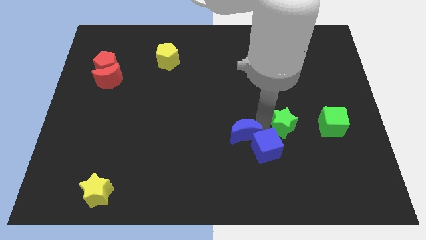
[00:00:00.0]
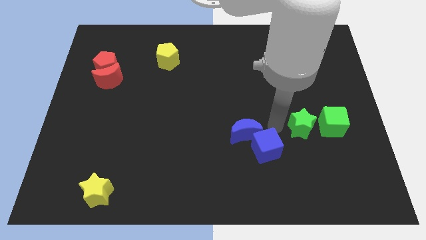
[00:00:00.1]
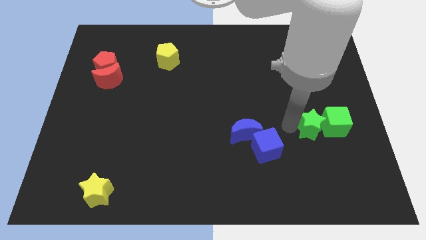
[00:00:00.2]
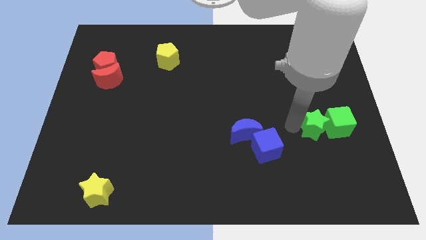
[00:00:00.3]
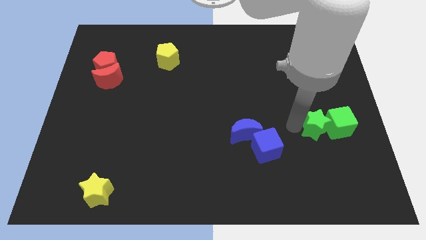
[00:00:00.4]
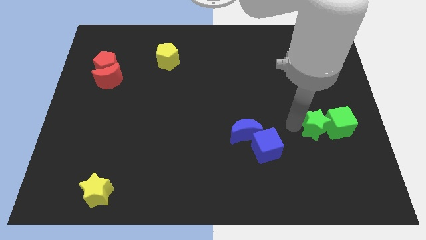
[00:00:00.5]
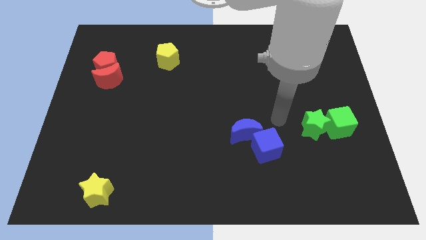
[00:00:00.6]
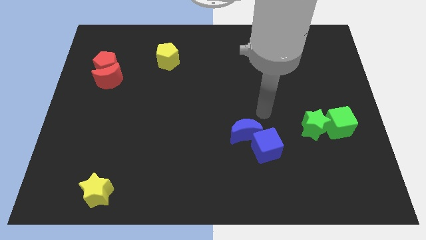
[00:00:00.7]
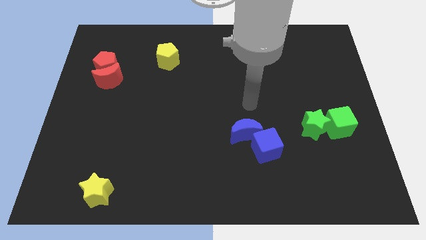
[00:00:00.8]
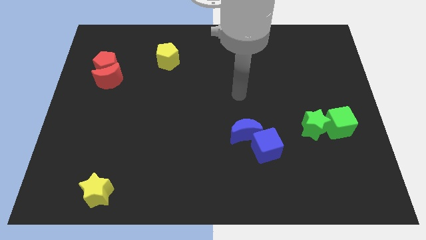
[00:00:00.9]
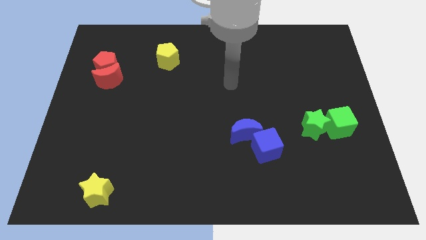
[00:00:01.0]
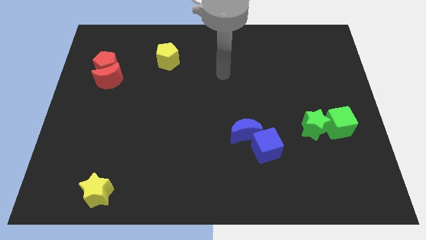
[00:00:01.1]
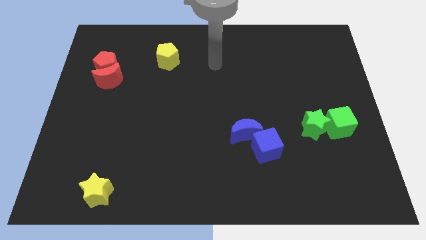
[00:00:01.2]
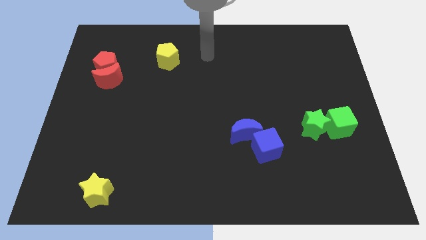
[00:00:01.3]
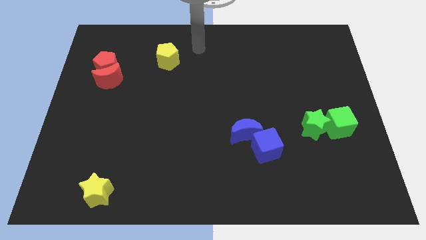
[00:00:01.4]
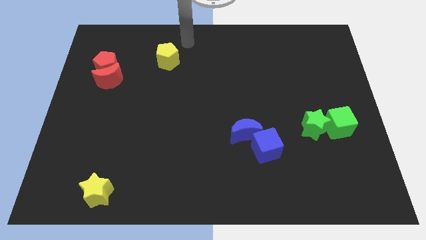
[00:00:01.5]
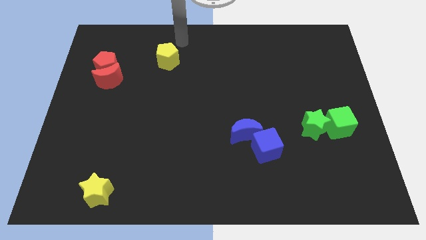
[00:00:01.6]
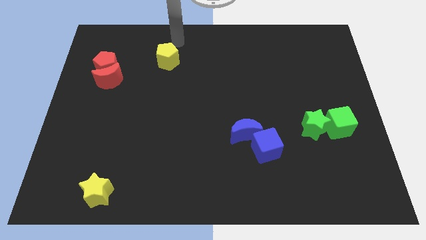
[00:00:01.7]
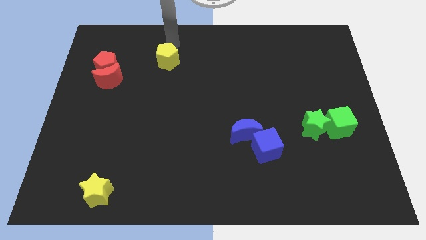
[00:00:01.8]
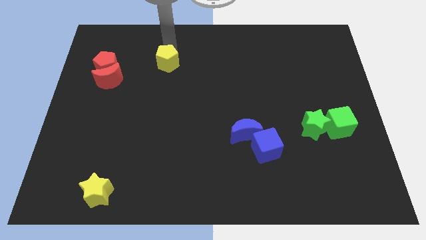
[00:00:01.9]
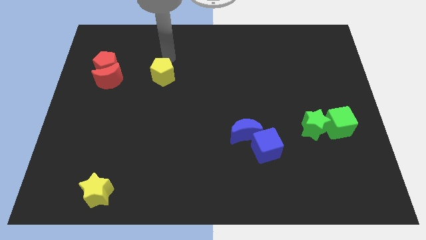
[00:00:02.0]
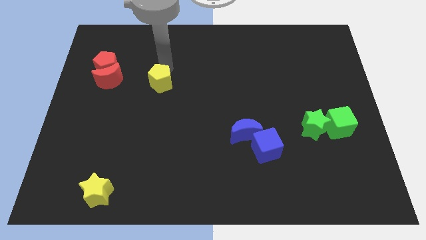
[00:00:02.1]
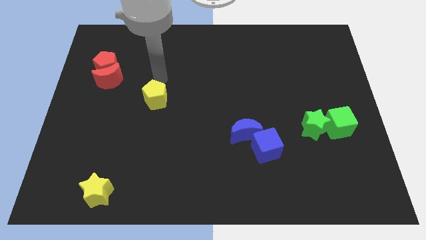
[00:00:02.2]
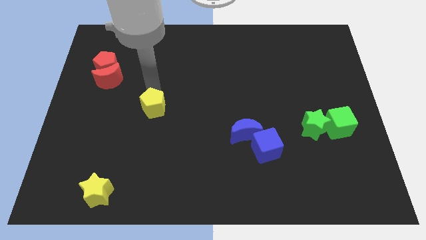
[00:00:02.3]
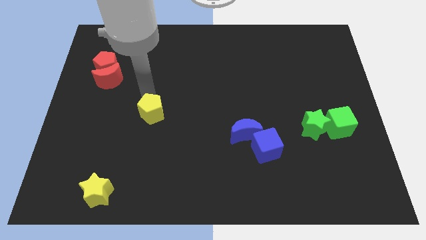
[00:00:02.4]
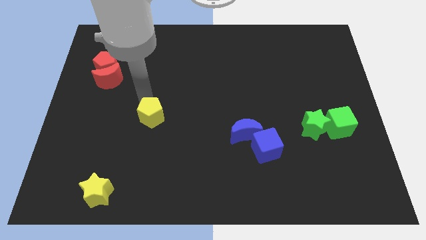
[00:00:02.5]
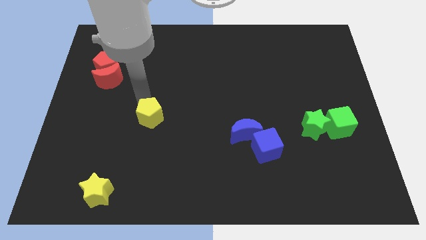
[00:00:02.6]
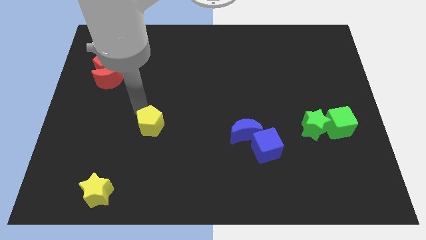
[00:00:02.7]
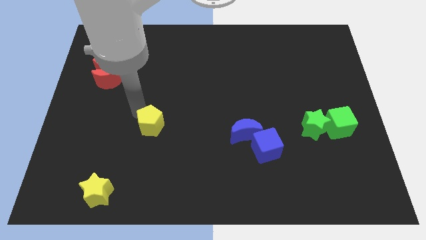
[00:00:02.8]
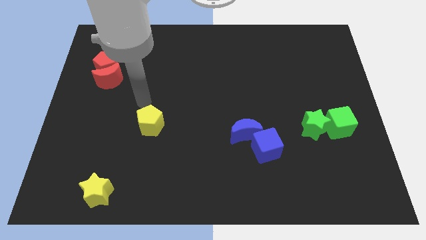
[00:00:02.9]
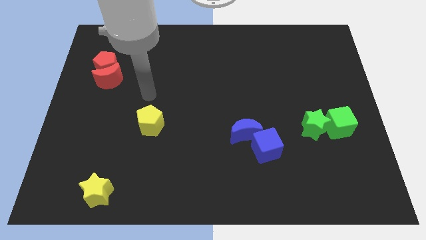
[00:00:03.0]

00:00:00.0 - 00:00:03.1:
move the yellow pentagon towards the bottom

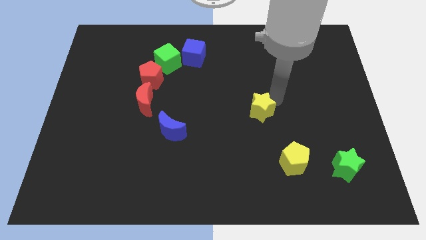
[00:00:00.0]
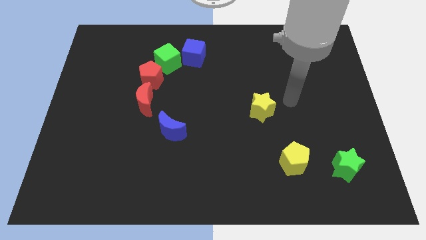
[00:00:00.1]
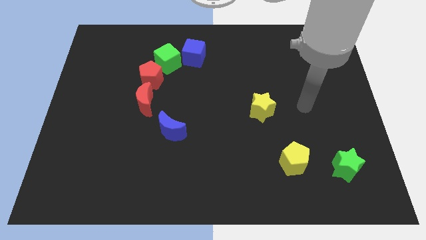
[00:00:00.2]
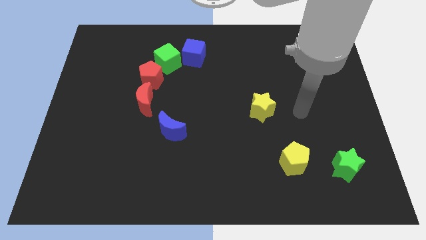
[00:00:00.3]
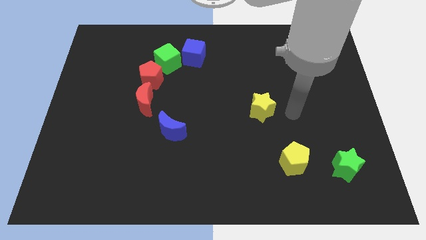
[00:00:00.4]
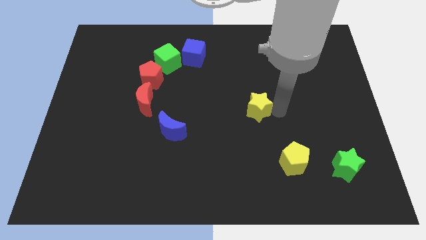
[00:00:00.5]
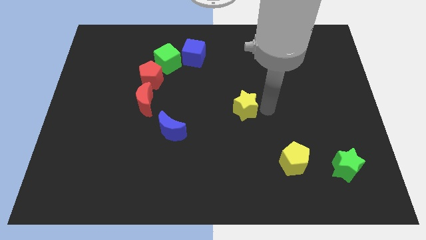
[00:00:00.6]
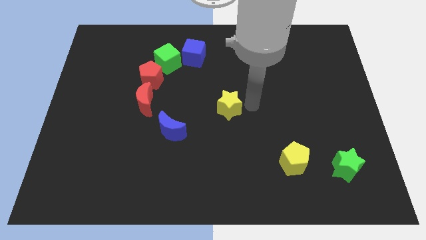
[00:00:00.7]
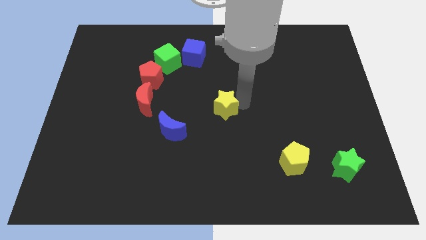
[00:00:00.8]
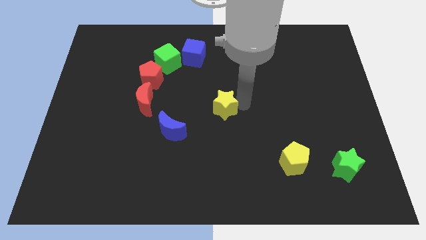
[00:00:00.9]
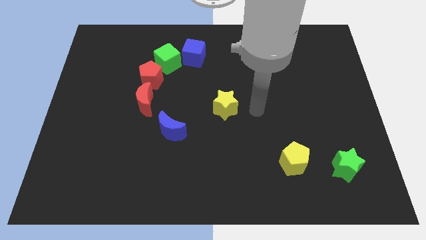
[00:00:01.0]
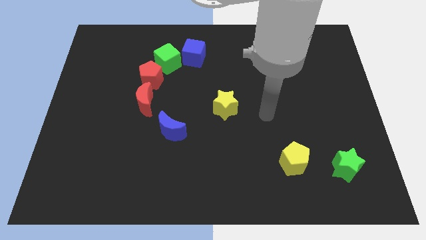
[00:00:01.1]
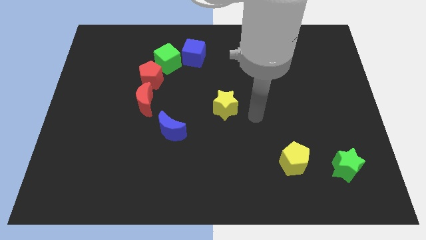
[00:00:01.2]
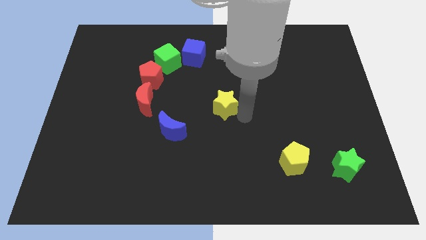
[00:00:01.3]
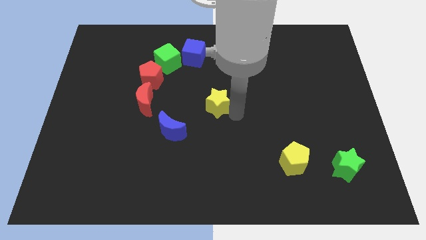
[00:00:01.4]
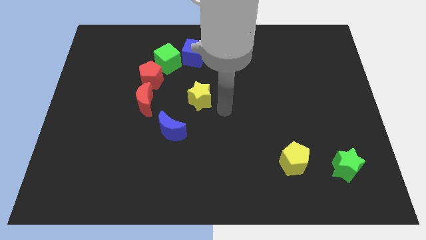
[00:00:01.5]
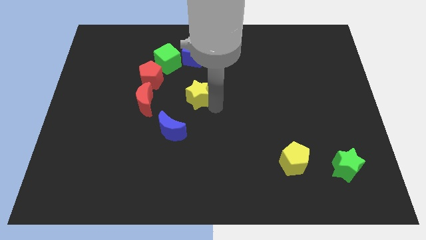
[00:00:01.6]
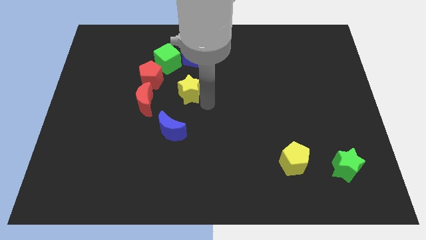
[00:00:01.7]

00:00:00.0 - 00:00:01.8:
place the yellow star below the blue cube

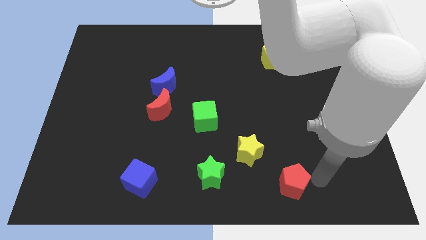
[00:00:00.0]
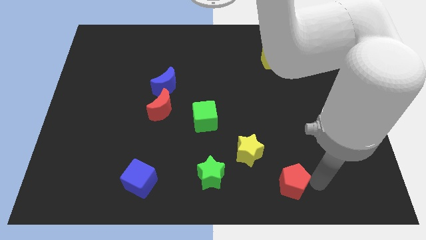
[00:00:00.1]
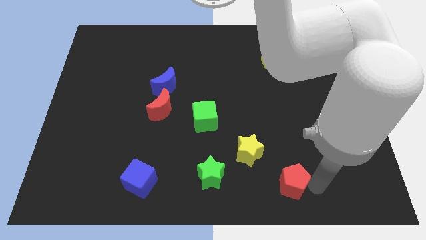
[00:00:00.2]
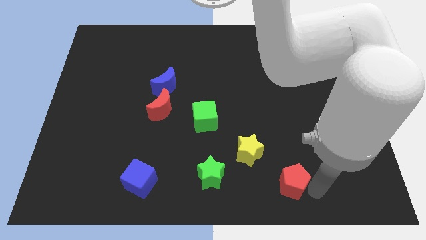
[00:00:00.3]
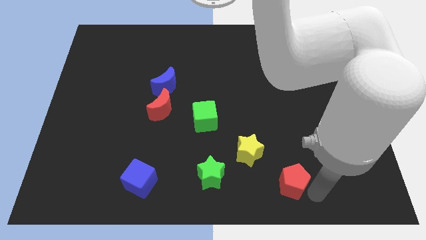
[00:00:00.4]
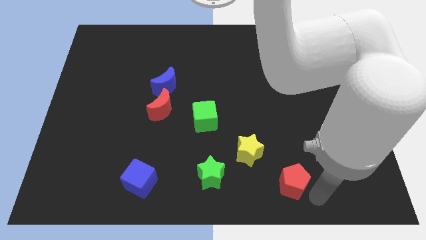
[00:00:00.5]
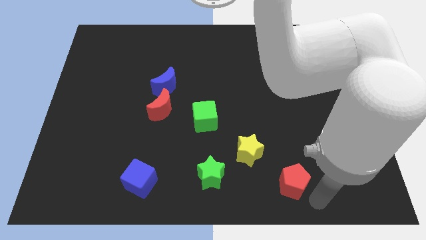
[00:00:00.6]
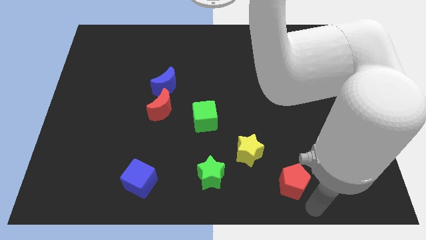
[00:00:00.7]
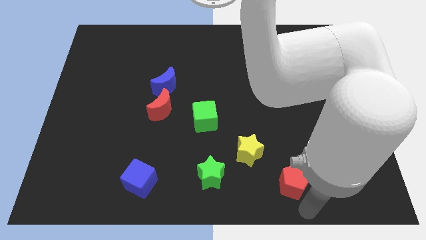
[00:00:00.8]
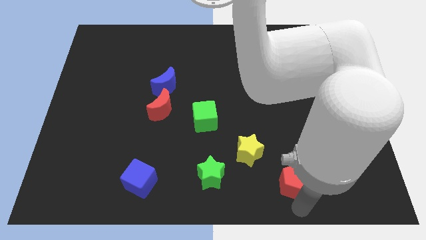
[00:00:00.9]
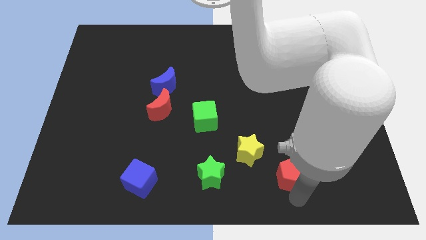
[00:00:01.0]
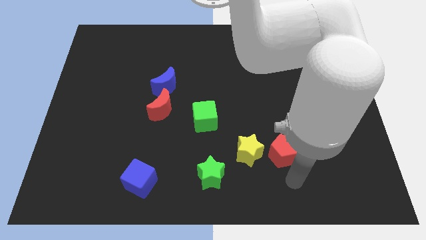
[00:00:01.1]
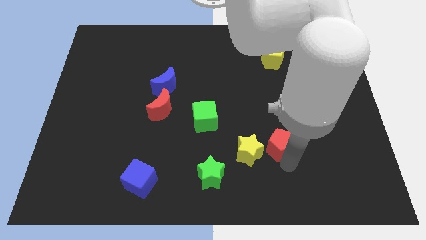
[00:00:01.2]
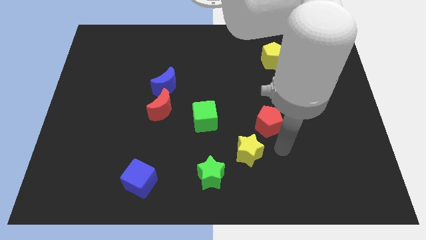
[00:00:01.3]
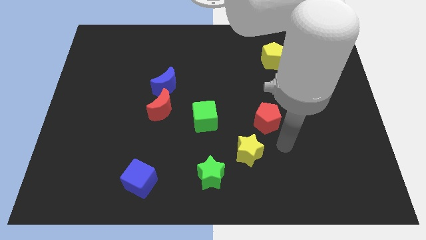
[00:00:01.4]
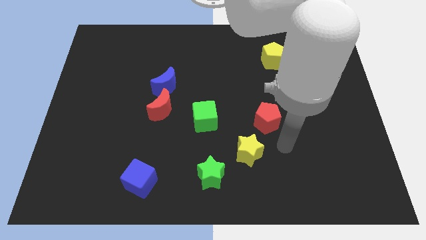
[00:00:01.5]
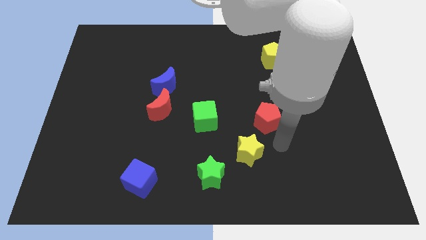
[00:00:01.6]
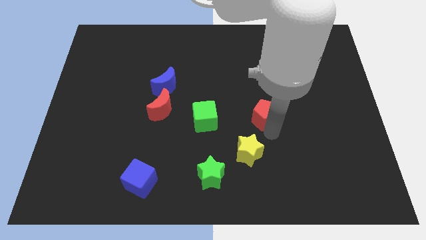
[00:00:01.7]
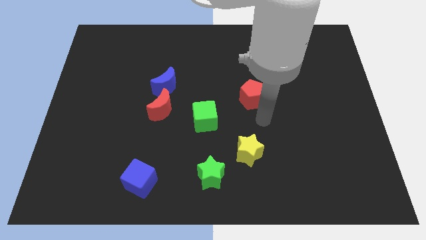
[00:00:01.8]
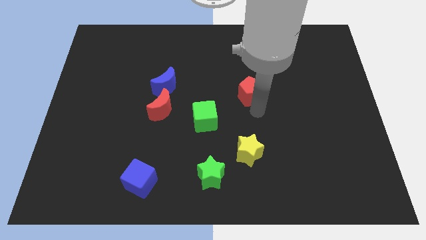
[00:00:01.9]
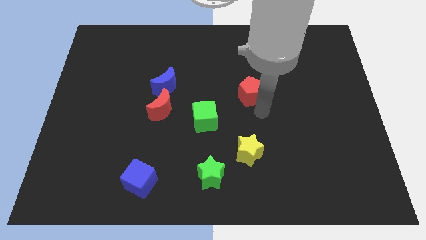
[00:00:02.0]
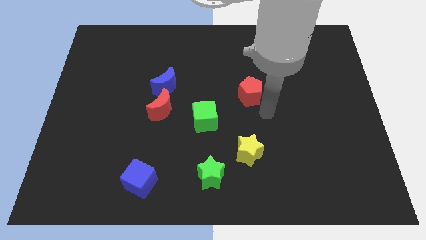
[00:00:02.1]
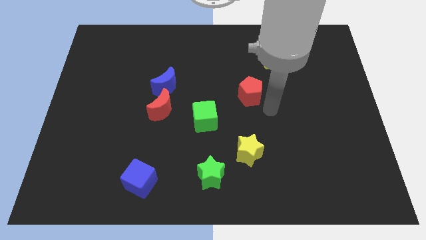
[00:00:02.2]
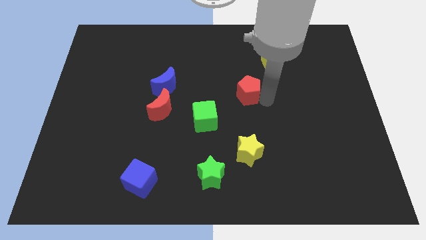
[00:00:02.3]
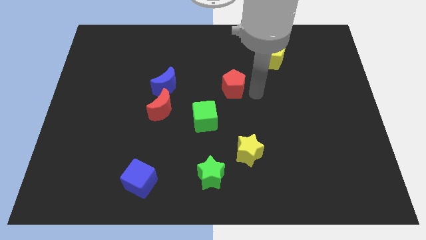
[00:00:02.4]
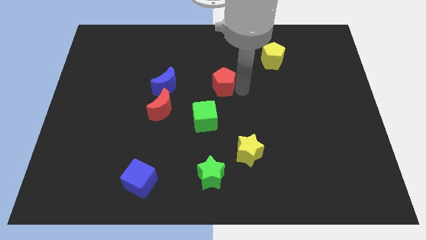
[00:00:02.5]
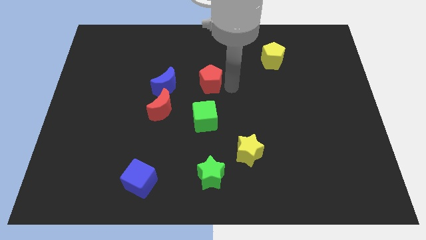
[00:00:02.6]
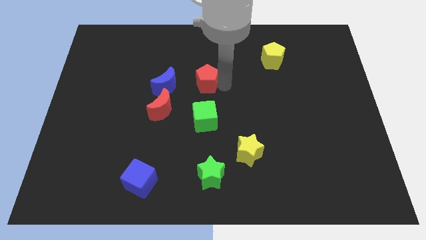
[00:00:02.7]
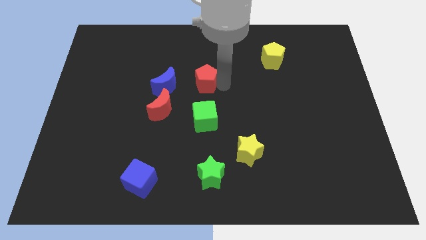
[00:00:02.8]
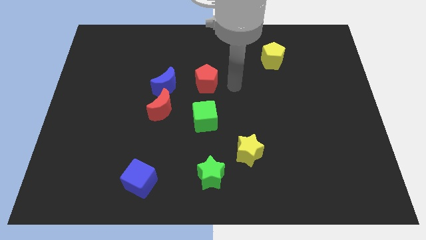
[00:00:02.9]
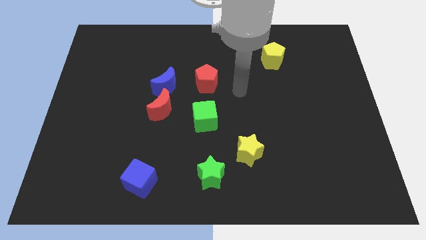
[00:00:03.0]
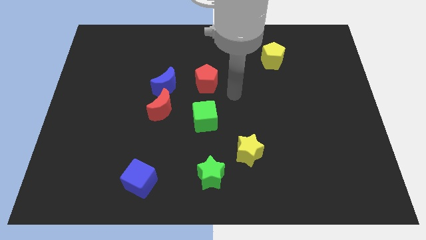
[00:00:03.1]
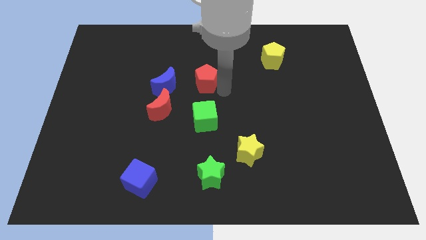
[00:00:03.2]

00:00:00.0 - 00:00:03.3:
move the red pentagon vertically to the top side of the green cube

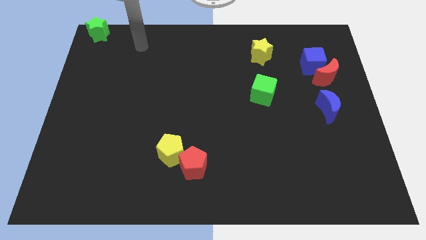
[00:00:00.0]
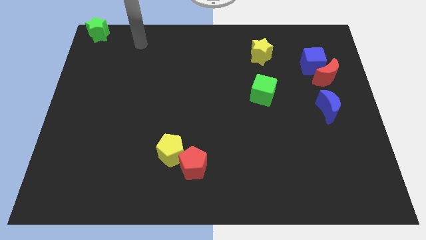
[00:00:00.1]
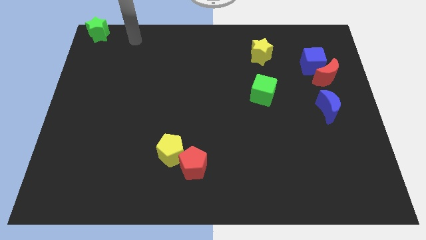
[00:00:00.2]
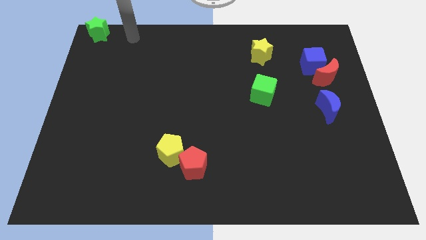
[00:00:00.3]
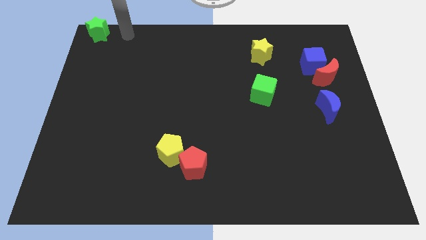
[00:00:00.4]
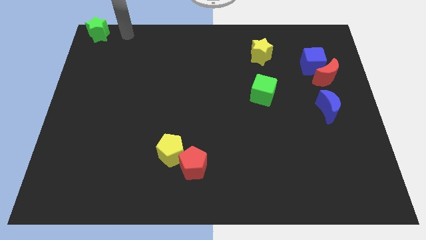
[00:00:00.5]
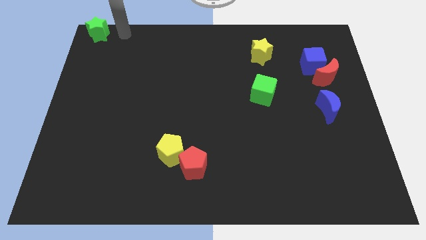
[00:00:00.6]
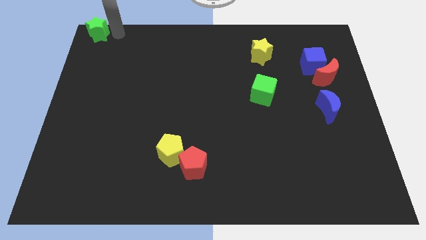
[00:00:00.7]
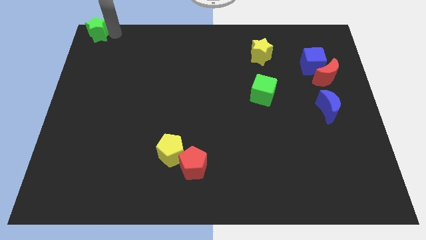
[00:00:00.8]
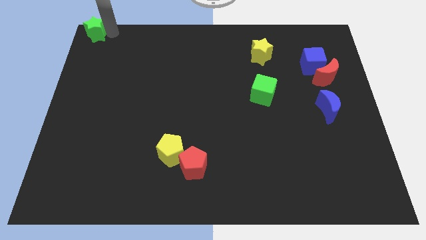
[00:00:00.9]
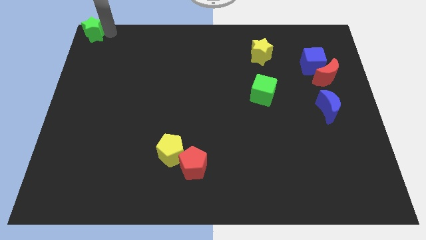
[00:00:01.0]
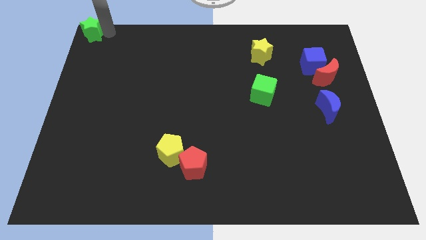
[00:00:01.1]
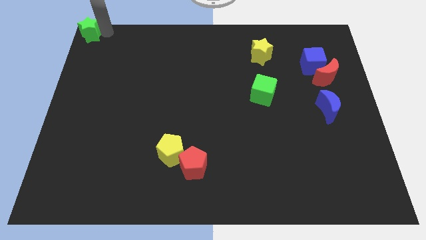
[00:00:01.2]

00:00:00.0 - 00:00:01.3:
slide green star at the top left corner
